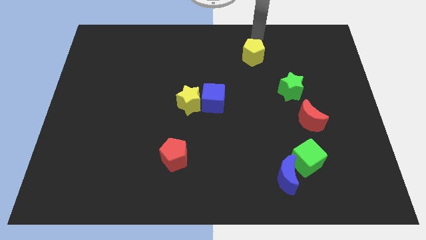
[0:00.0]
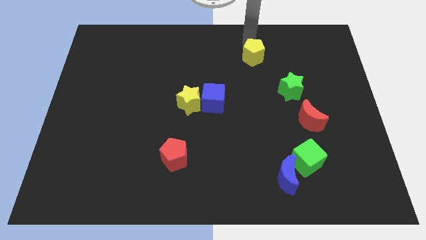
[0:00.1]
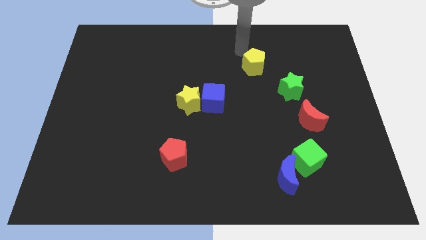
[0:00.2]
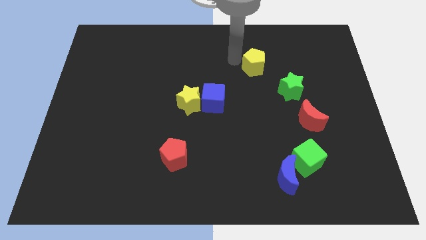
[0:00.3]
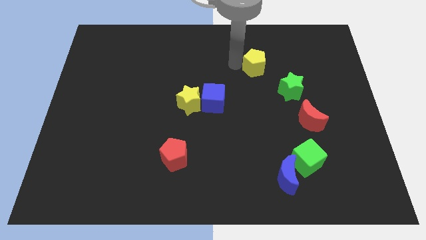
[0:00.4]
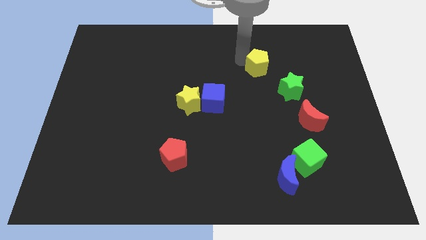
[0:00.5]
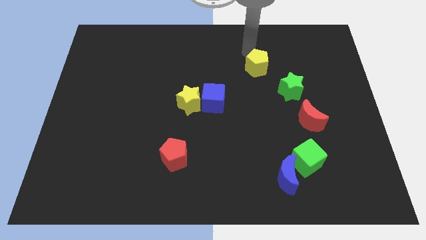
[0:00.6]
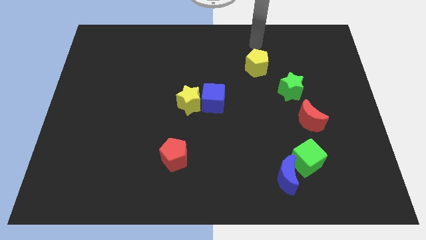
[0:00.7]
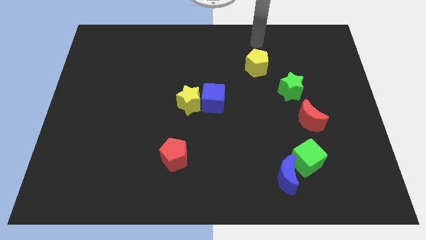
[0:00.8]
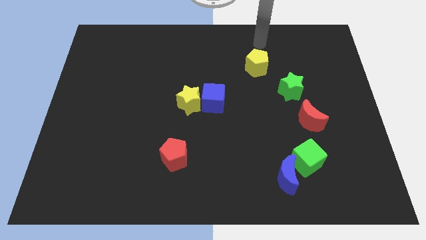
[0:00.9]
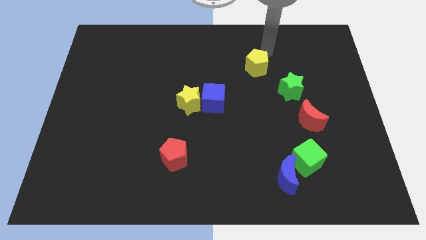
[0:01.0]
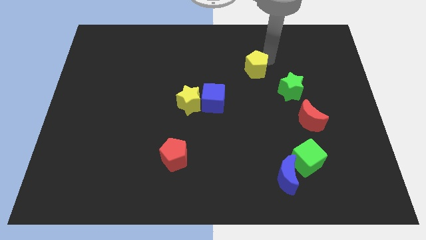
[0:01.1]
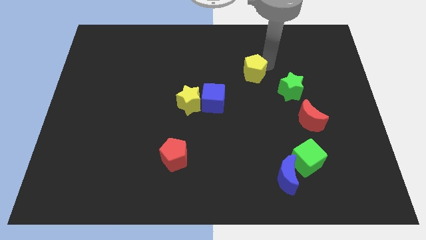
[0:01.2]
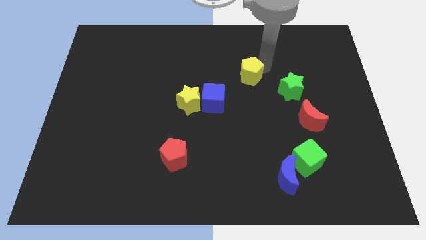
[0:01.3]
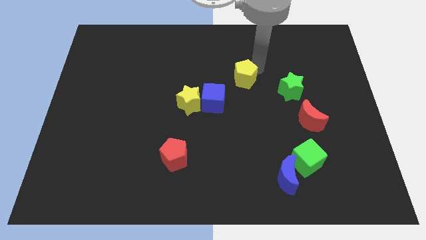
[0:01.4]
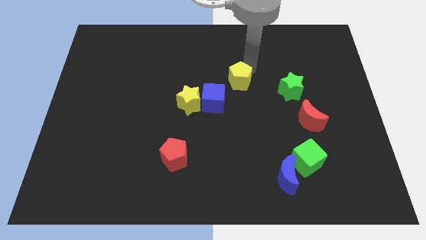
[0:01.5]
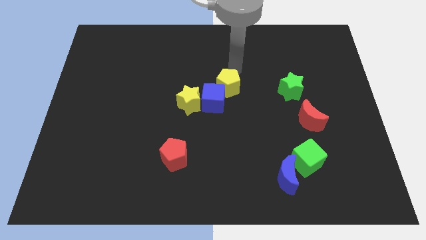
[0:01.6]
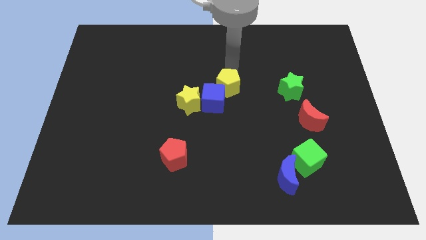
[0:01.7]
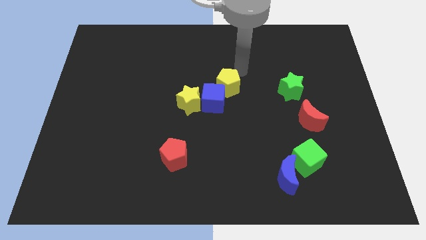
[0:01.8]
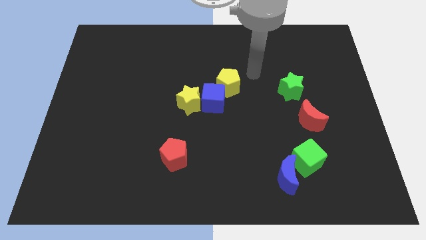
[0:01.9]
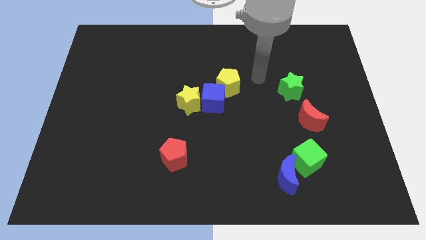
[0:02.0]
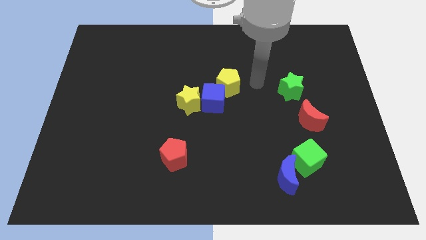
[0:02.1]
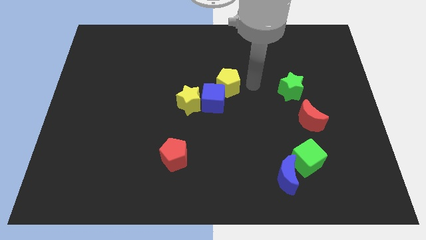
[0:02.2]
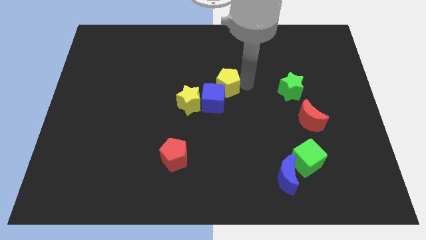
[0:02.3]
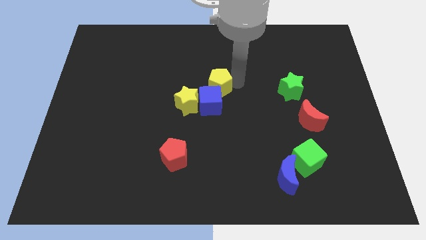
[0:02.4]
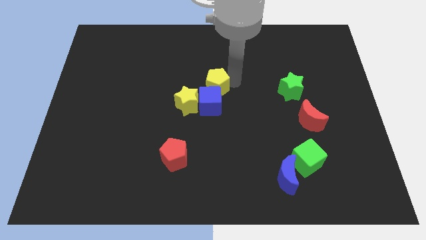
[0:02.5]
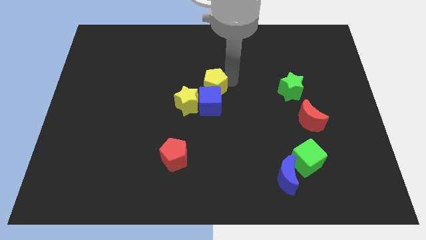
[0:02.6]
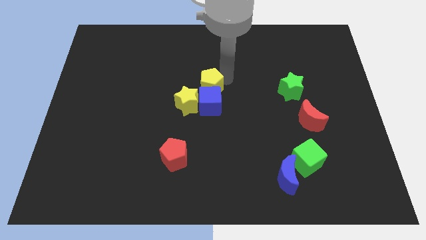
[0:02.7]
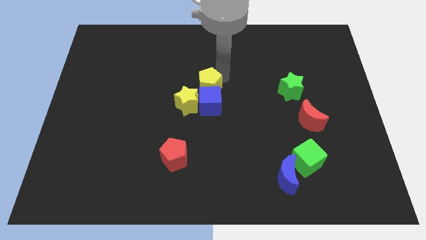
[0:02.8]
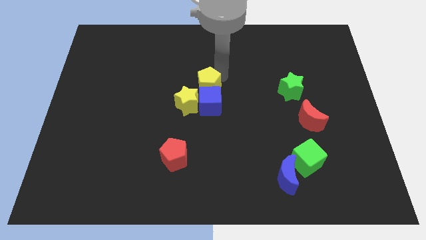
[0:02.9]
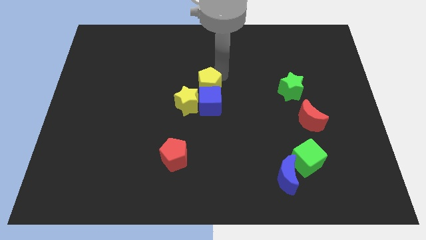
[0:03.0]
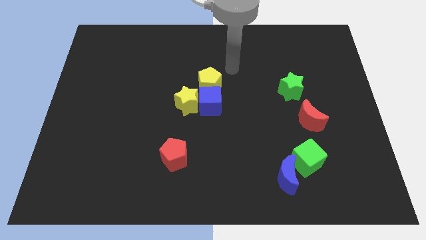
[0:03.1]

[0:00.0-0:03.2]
push the yellow pentagon to the top of the blue cube

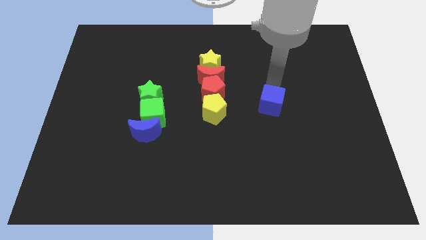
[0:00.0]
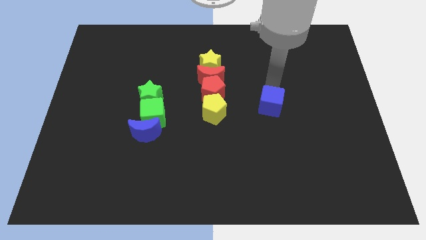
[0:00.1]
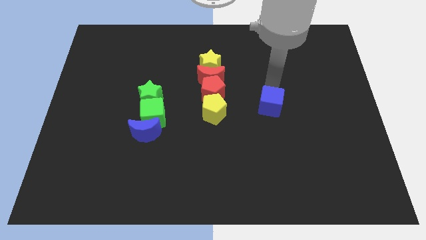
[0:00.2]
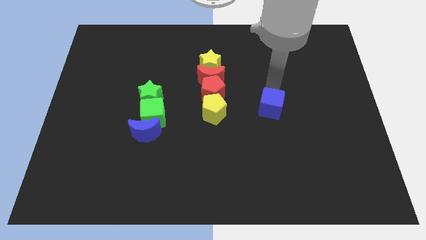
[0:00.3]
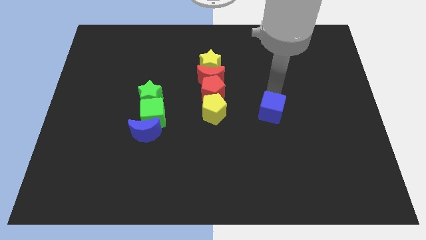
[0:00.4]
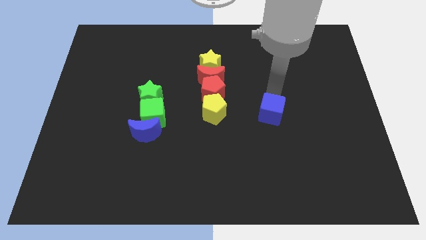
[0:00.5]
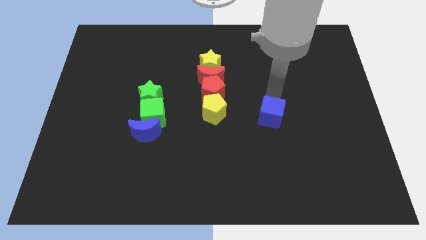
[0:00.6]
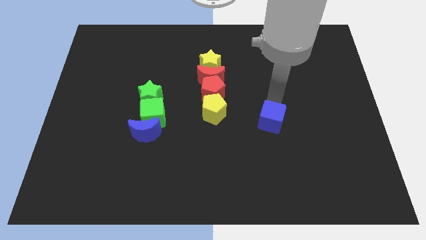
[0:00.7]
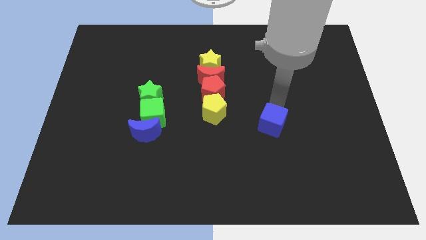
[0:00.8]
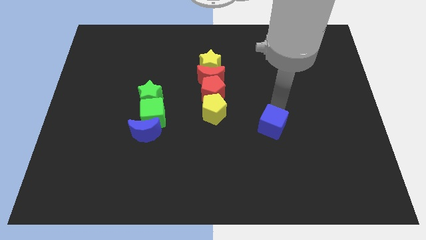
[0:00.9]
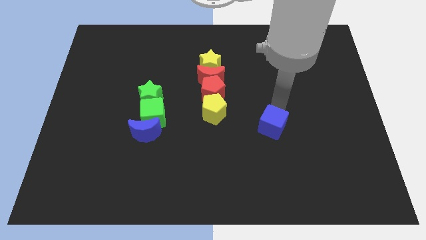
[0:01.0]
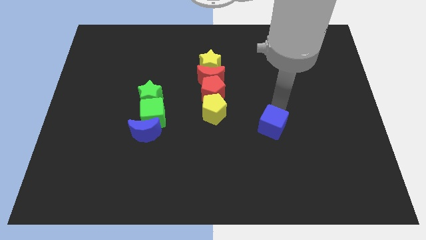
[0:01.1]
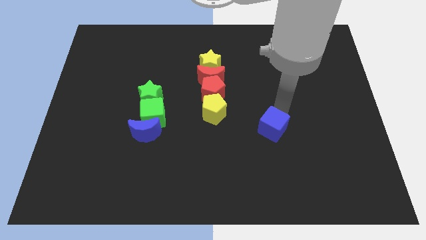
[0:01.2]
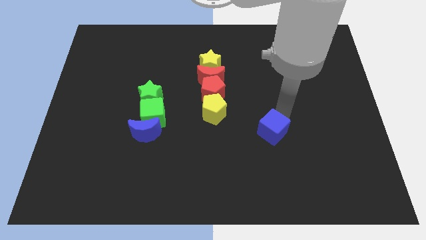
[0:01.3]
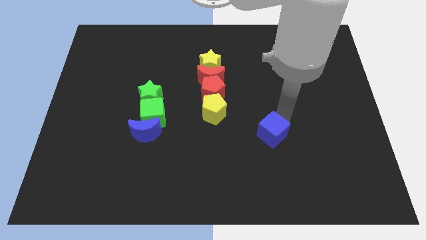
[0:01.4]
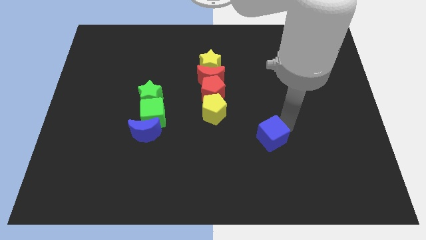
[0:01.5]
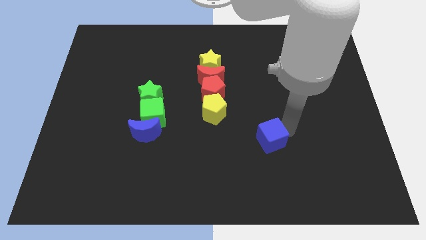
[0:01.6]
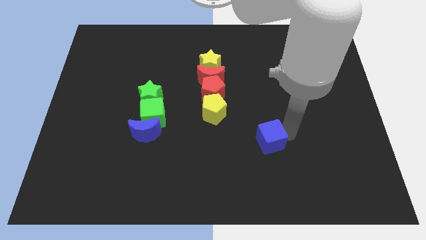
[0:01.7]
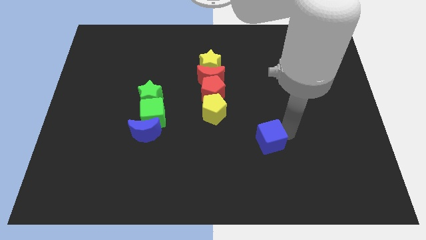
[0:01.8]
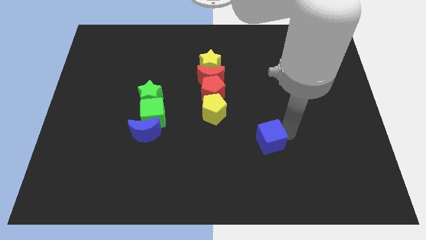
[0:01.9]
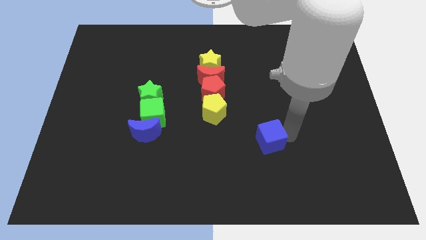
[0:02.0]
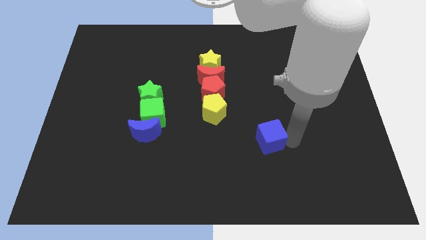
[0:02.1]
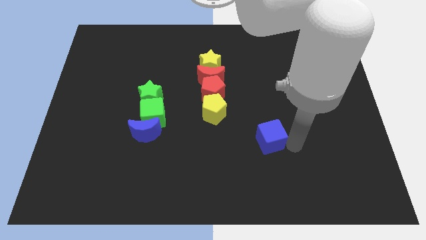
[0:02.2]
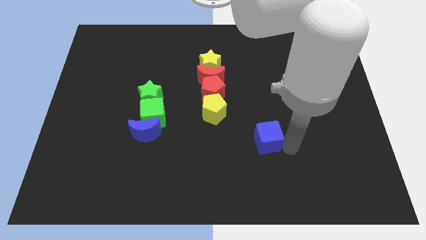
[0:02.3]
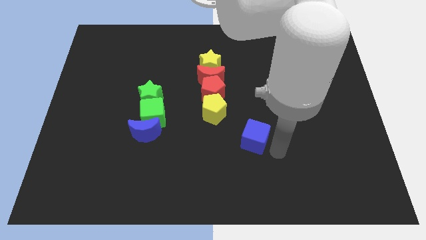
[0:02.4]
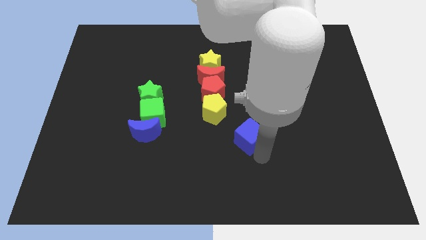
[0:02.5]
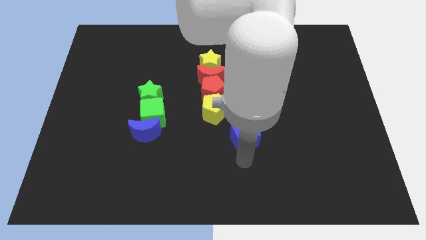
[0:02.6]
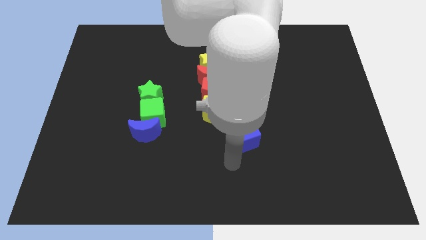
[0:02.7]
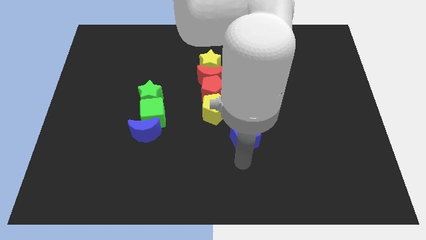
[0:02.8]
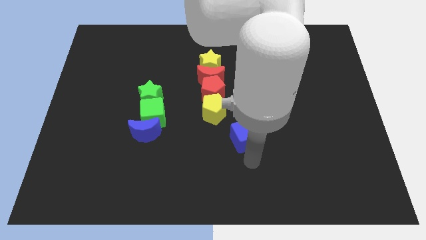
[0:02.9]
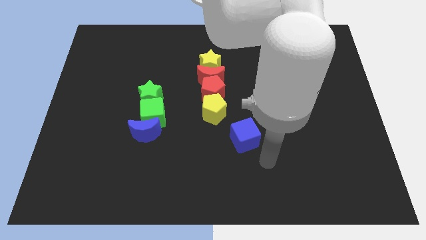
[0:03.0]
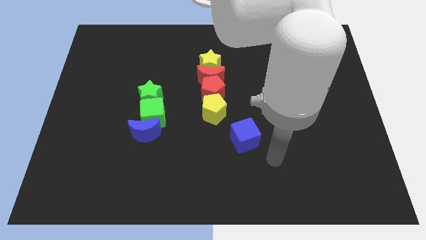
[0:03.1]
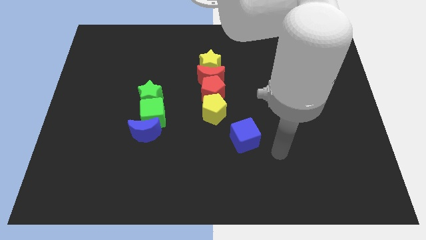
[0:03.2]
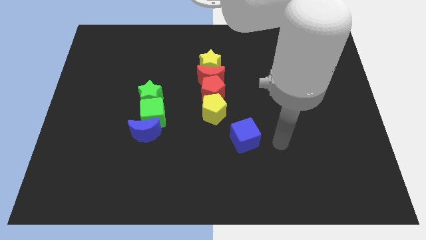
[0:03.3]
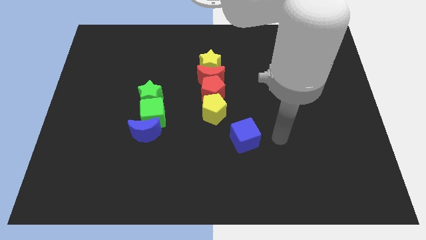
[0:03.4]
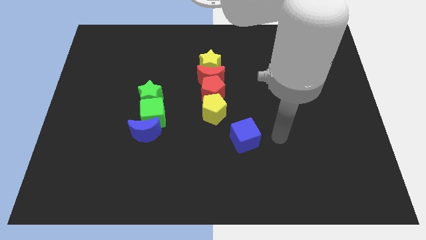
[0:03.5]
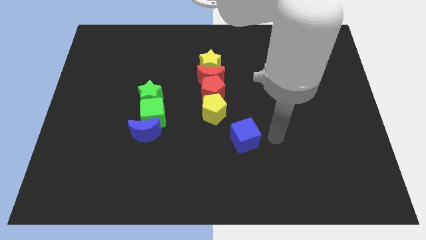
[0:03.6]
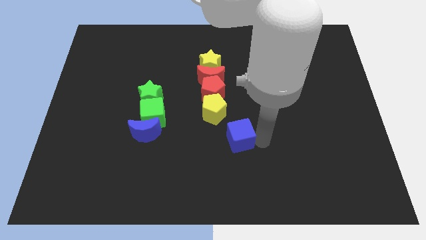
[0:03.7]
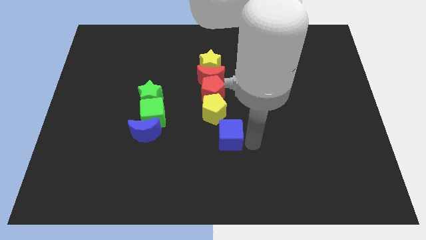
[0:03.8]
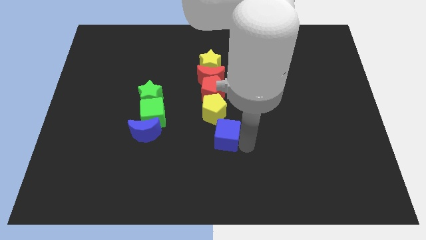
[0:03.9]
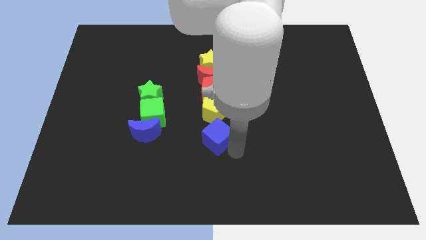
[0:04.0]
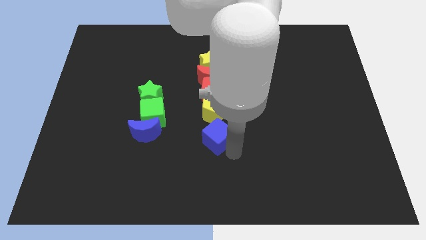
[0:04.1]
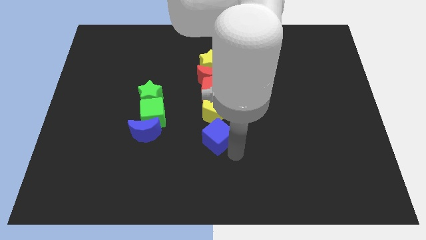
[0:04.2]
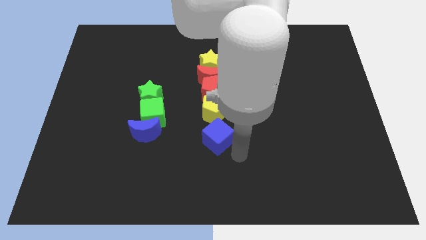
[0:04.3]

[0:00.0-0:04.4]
move the blue cube below the yellow pentagon

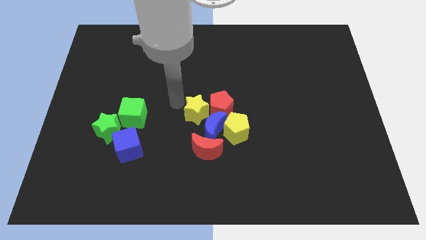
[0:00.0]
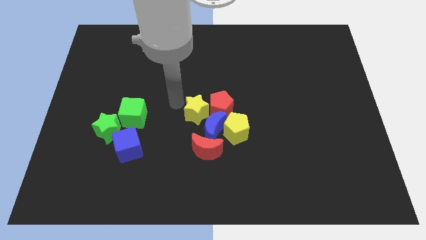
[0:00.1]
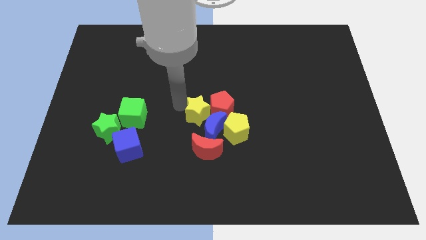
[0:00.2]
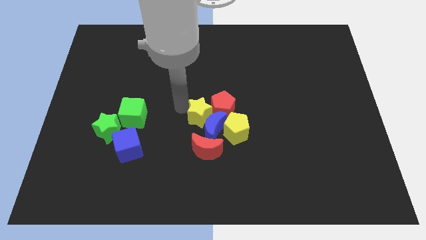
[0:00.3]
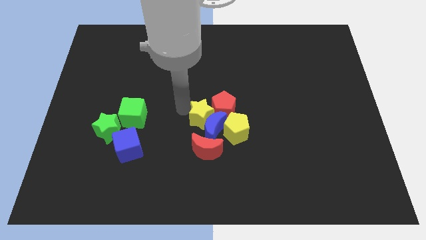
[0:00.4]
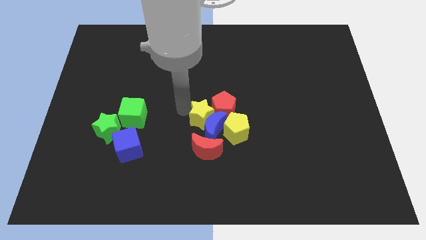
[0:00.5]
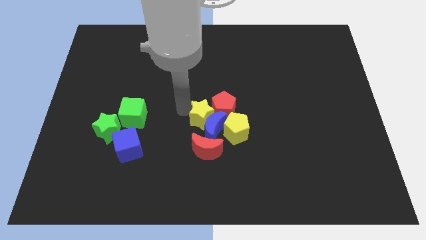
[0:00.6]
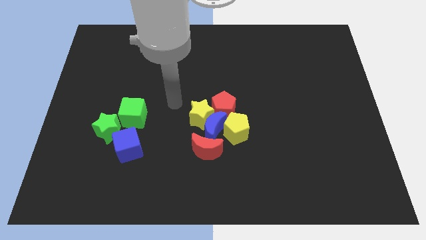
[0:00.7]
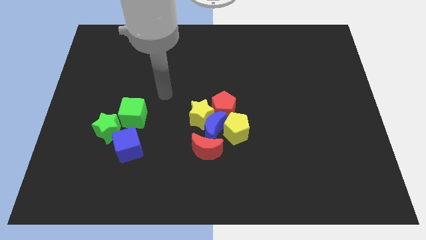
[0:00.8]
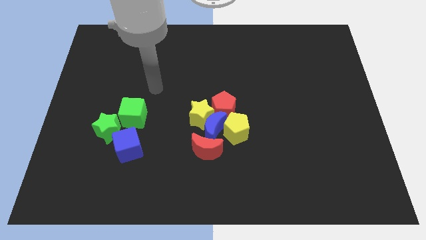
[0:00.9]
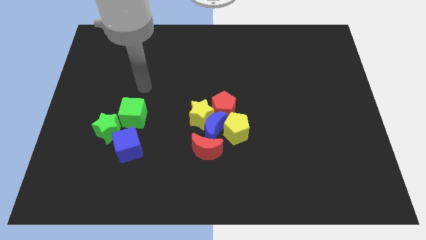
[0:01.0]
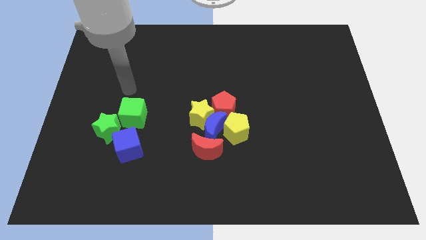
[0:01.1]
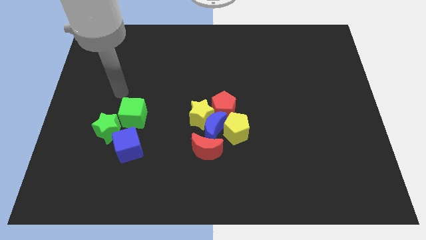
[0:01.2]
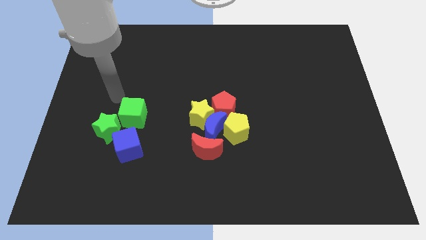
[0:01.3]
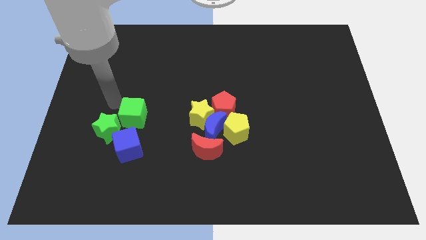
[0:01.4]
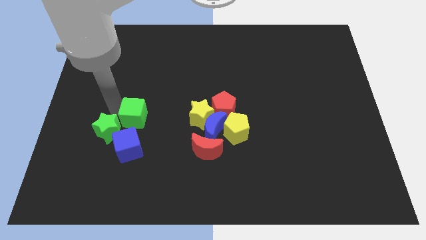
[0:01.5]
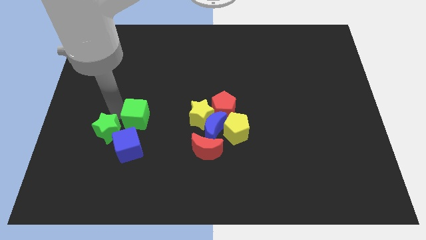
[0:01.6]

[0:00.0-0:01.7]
move yellow star close to blue crescent
